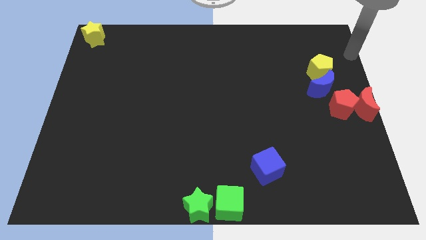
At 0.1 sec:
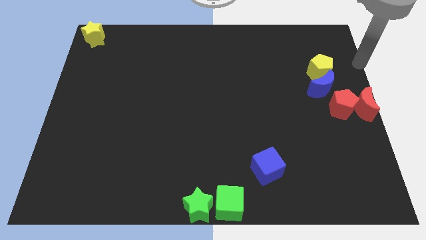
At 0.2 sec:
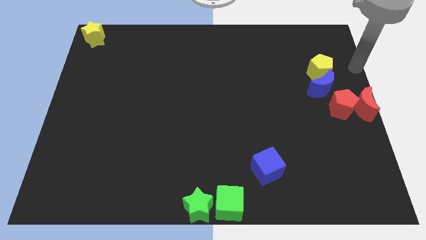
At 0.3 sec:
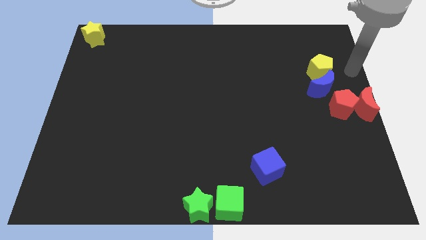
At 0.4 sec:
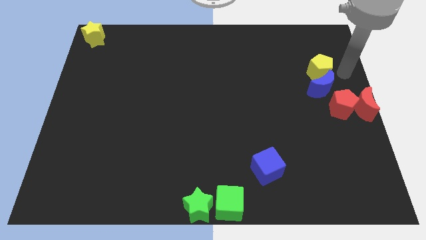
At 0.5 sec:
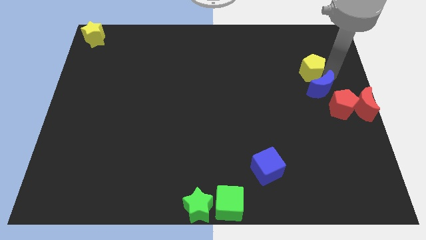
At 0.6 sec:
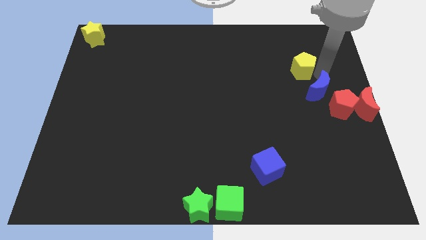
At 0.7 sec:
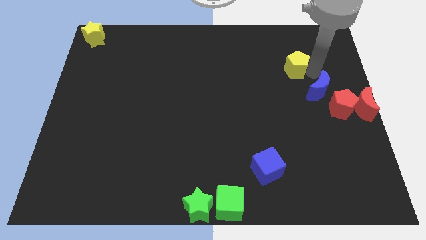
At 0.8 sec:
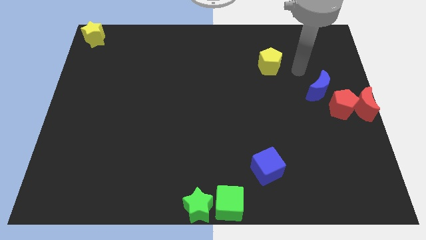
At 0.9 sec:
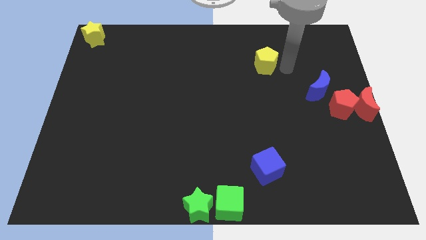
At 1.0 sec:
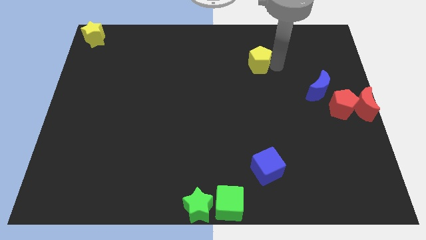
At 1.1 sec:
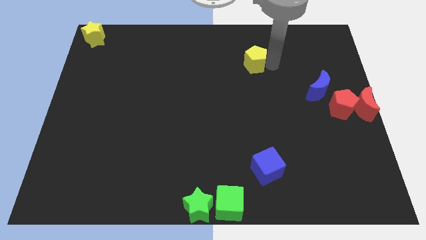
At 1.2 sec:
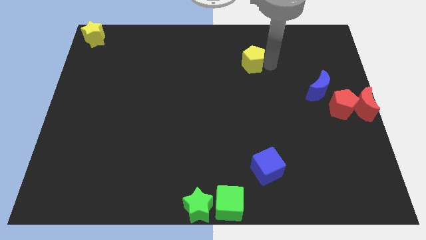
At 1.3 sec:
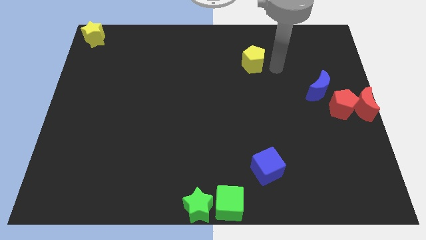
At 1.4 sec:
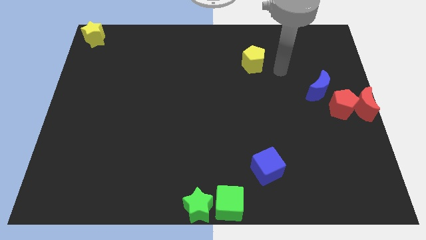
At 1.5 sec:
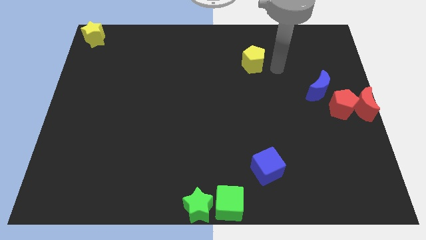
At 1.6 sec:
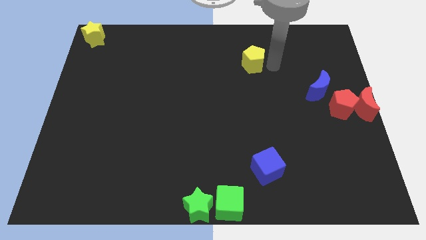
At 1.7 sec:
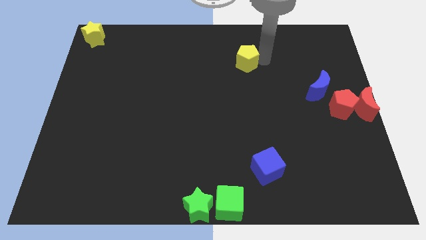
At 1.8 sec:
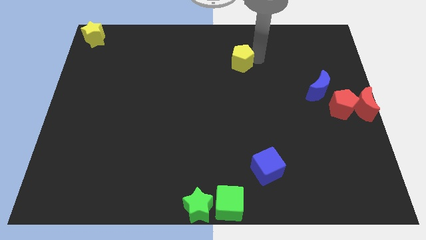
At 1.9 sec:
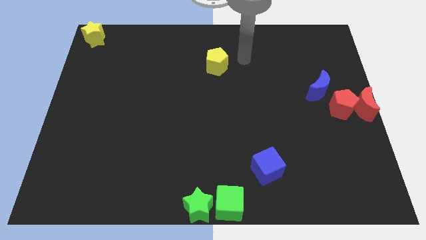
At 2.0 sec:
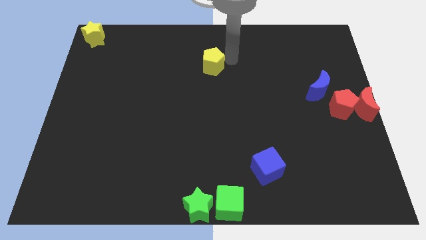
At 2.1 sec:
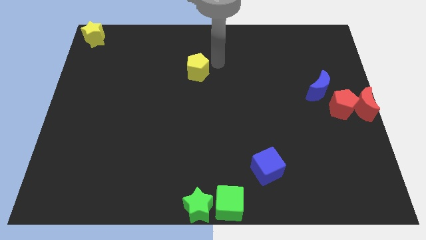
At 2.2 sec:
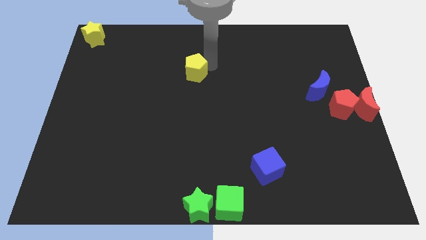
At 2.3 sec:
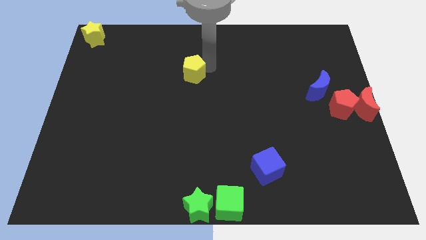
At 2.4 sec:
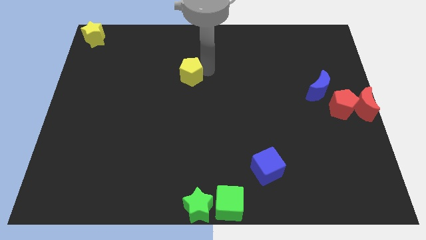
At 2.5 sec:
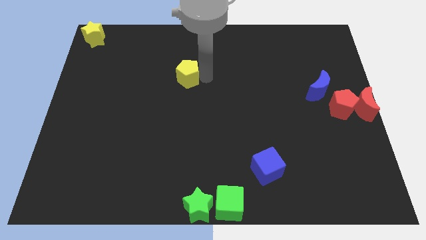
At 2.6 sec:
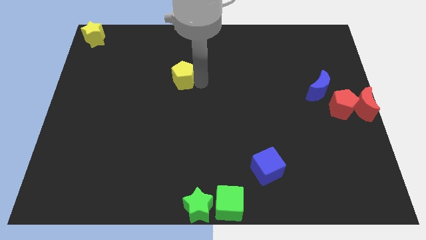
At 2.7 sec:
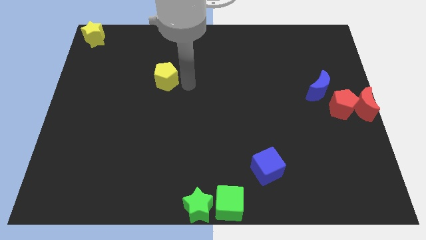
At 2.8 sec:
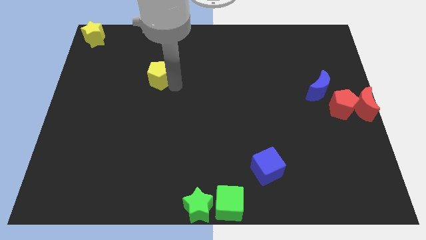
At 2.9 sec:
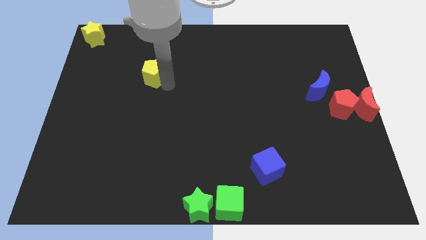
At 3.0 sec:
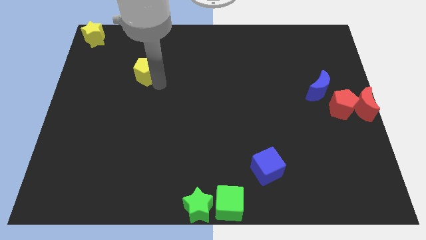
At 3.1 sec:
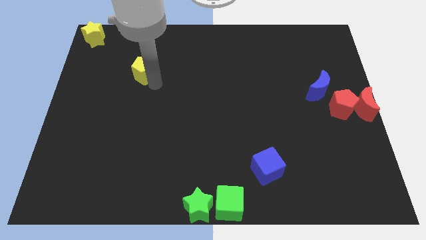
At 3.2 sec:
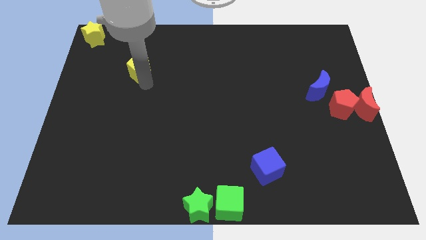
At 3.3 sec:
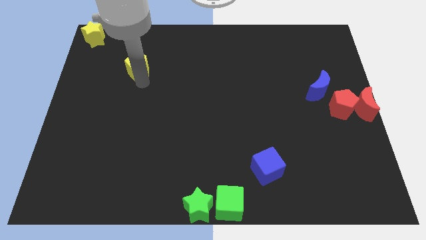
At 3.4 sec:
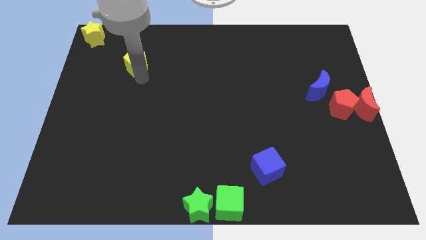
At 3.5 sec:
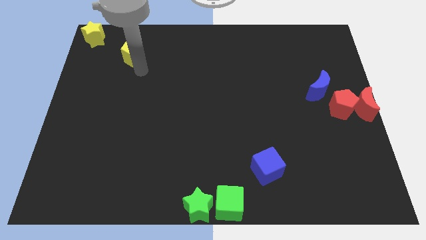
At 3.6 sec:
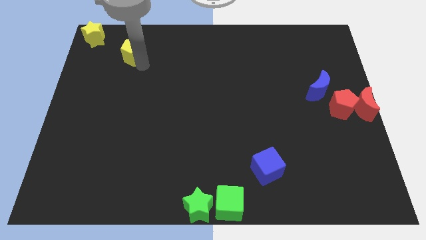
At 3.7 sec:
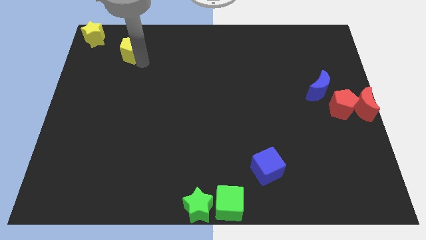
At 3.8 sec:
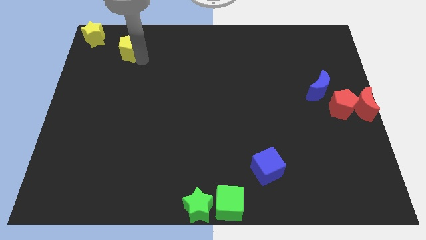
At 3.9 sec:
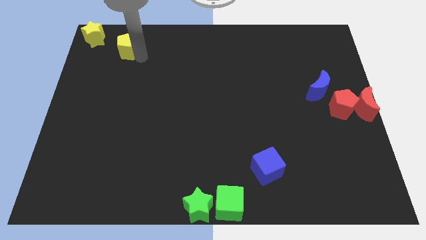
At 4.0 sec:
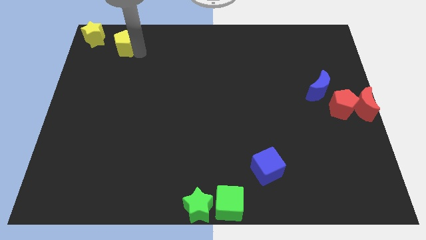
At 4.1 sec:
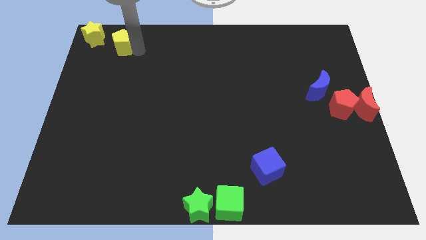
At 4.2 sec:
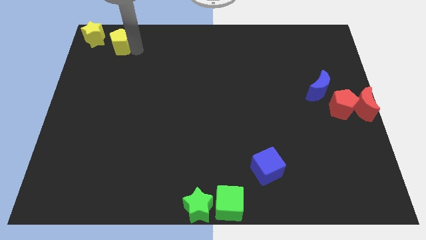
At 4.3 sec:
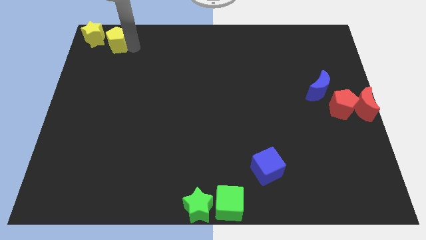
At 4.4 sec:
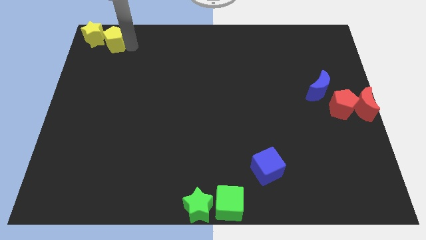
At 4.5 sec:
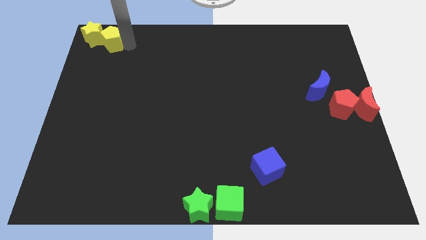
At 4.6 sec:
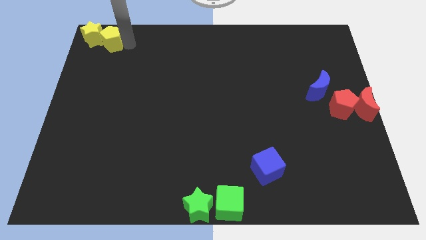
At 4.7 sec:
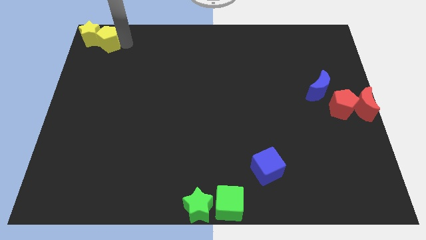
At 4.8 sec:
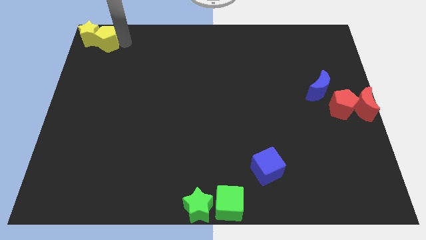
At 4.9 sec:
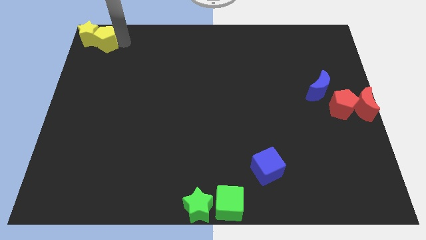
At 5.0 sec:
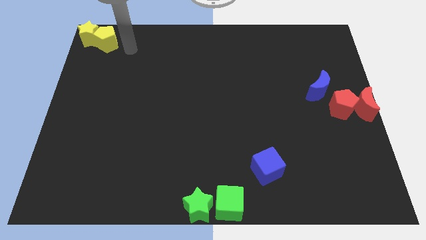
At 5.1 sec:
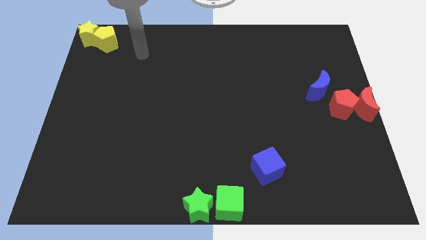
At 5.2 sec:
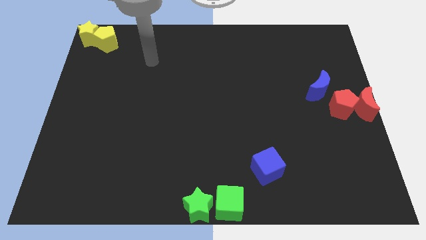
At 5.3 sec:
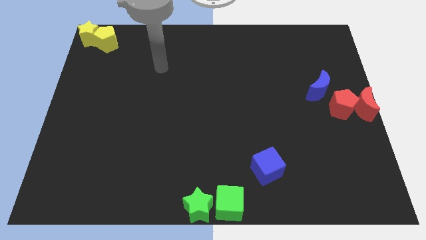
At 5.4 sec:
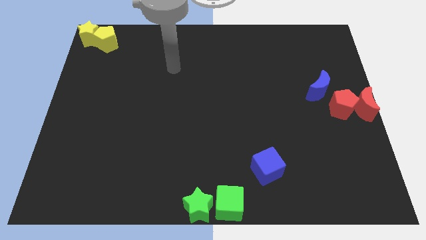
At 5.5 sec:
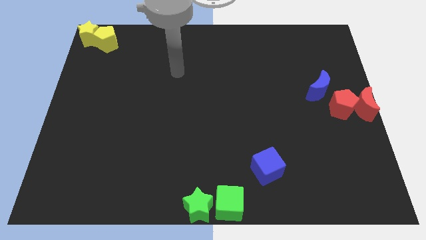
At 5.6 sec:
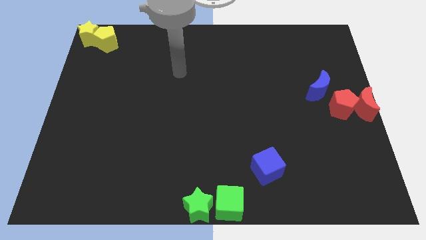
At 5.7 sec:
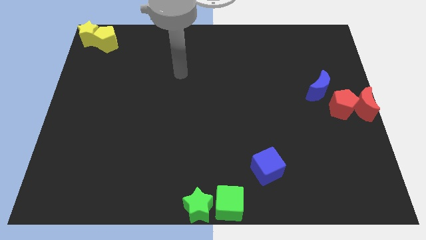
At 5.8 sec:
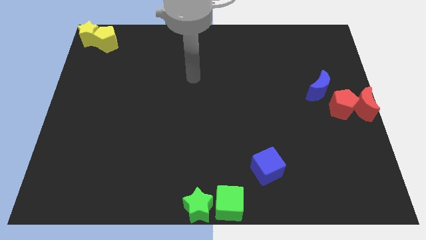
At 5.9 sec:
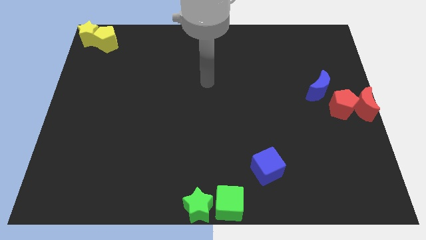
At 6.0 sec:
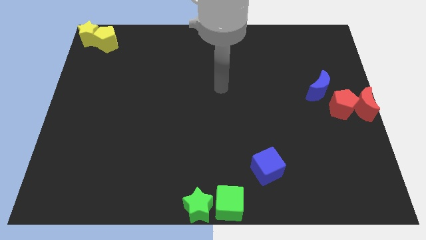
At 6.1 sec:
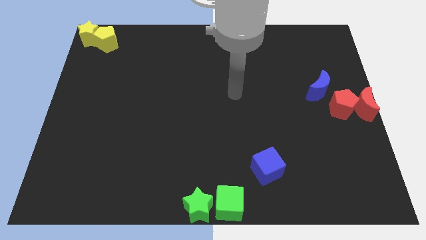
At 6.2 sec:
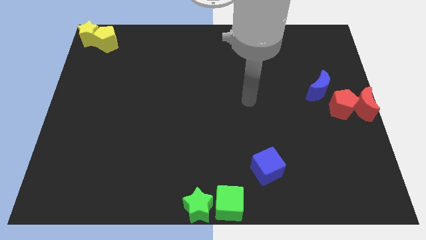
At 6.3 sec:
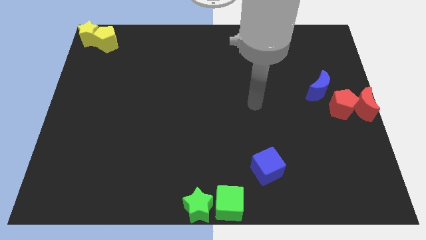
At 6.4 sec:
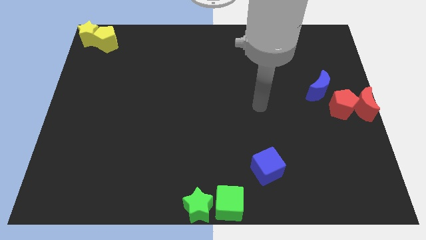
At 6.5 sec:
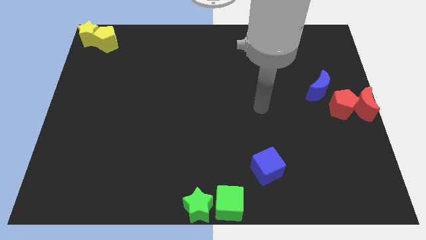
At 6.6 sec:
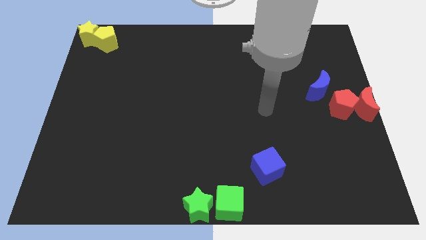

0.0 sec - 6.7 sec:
place yellow pentagon to the right side of the yellow star

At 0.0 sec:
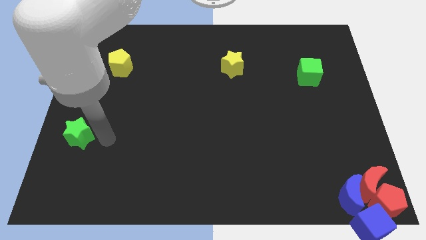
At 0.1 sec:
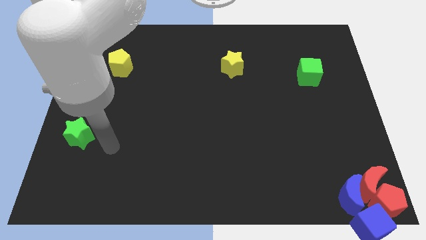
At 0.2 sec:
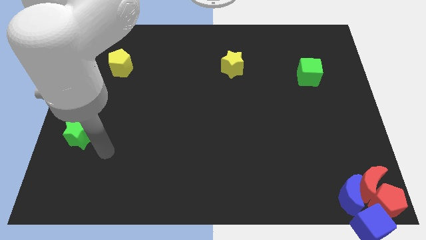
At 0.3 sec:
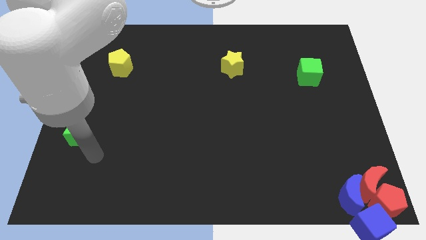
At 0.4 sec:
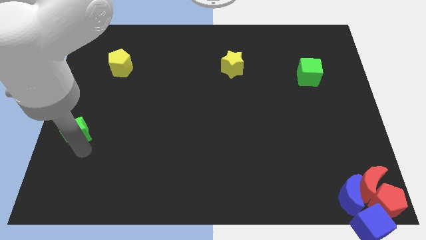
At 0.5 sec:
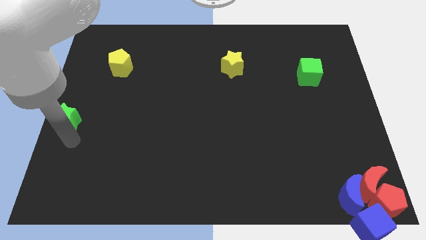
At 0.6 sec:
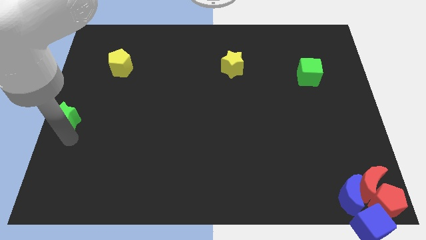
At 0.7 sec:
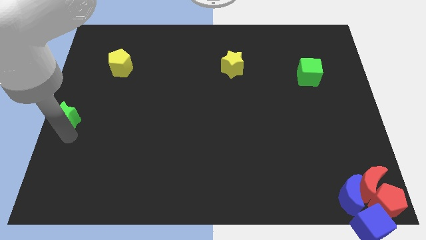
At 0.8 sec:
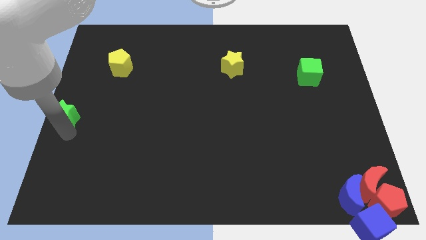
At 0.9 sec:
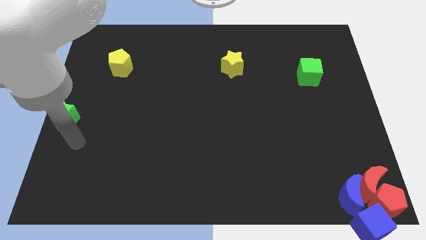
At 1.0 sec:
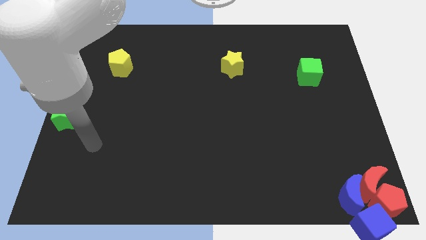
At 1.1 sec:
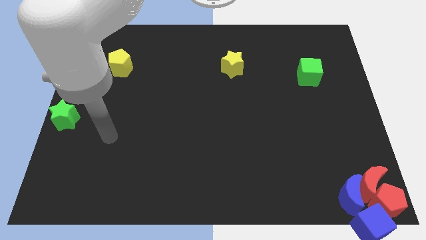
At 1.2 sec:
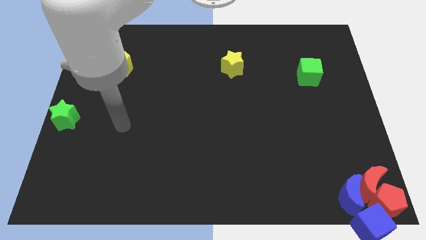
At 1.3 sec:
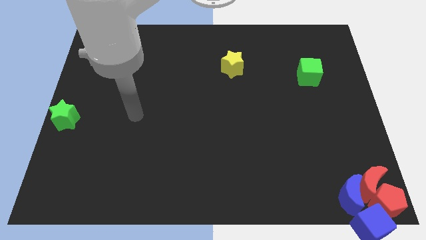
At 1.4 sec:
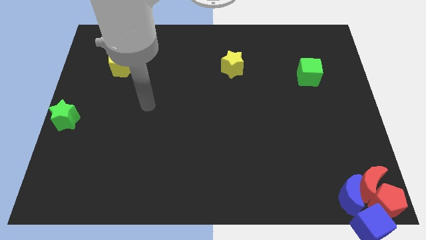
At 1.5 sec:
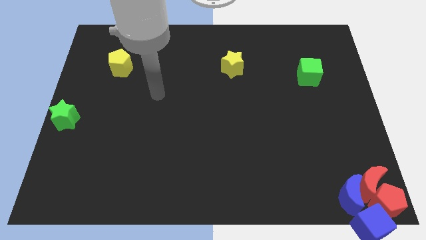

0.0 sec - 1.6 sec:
move the green star to the center left

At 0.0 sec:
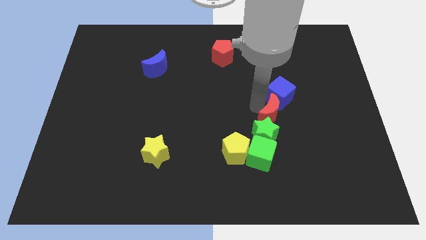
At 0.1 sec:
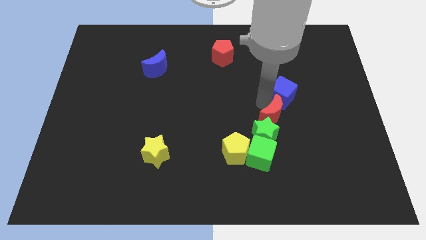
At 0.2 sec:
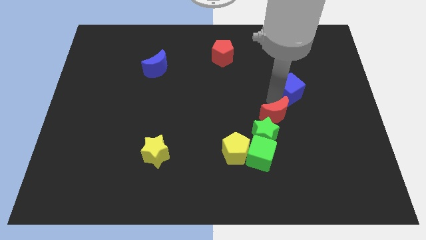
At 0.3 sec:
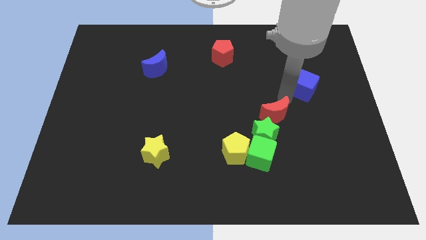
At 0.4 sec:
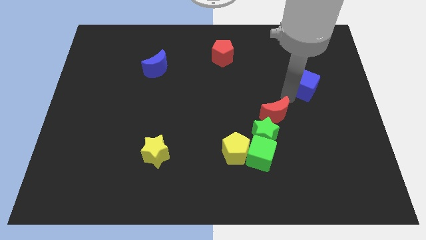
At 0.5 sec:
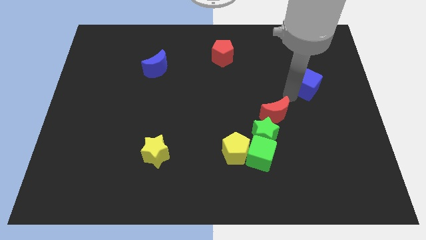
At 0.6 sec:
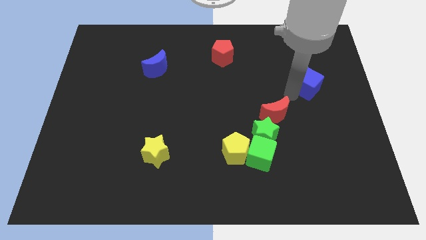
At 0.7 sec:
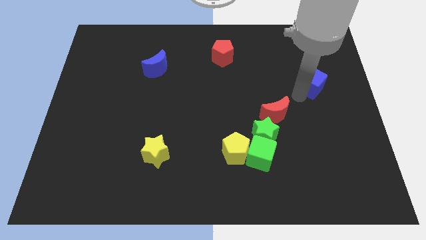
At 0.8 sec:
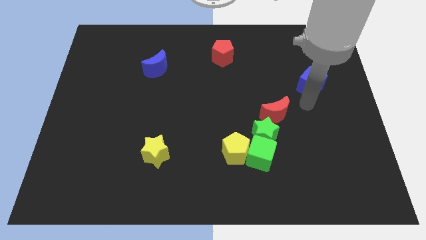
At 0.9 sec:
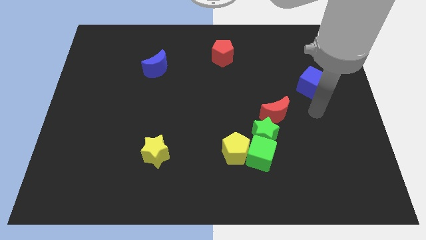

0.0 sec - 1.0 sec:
push the blue cube to the top right of the red crescent
